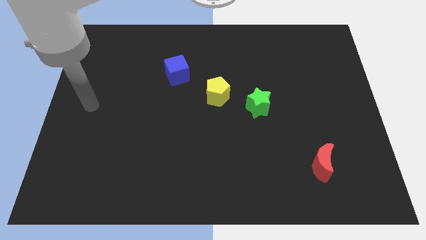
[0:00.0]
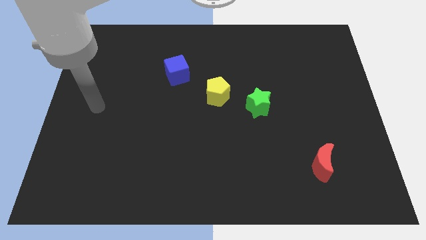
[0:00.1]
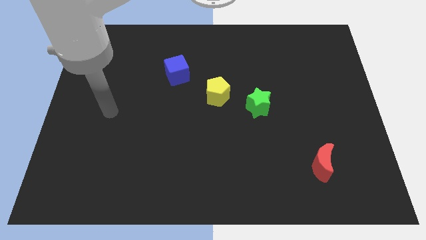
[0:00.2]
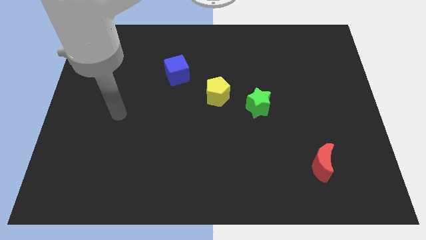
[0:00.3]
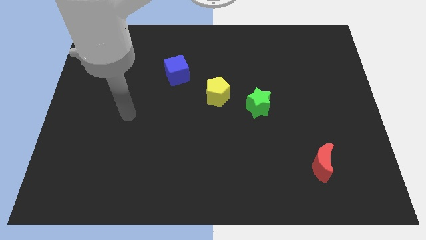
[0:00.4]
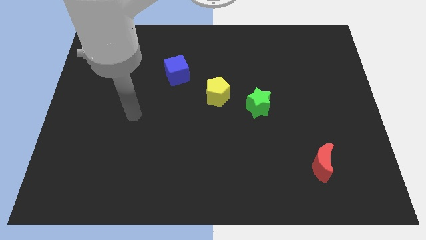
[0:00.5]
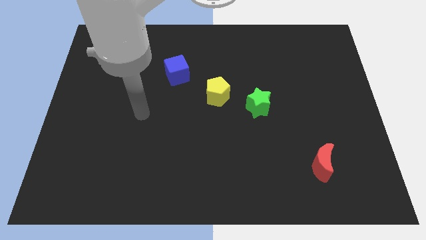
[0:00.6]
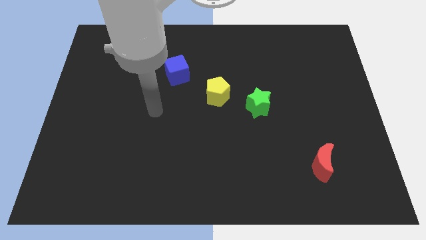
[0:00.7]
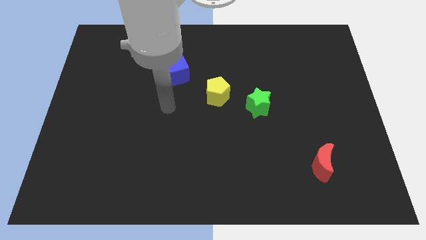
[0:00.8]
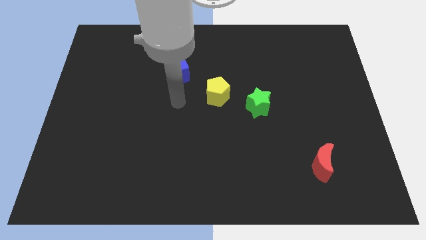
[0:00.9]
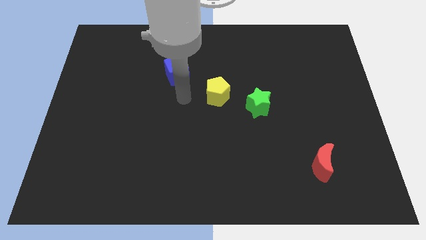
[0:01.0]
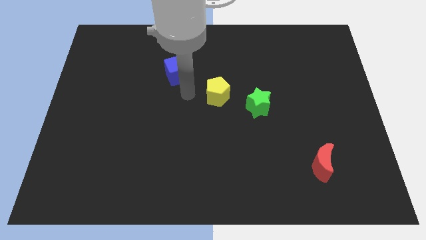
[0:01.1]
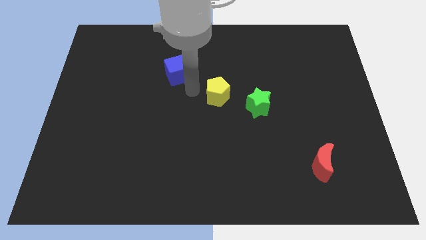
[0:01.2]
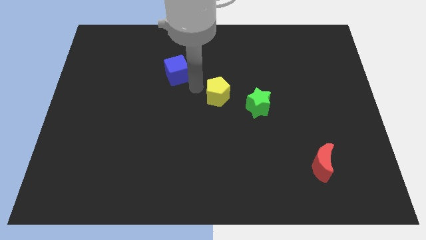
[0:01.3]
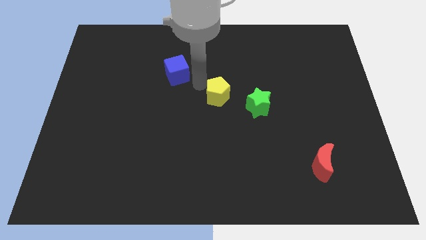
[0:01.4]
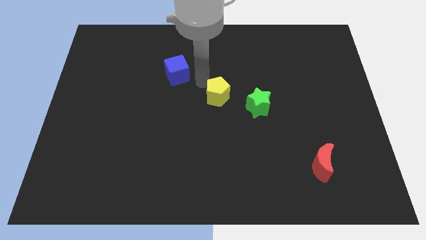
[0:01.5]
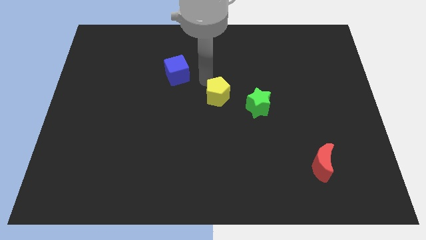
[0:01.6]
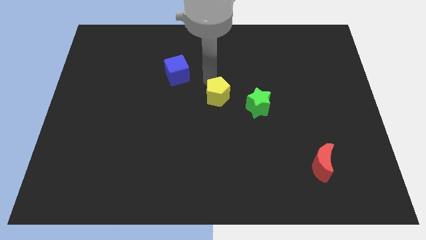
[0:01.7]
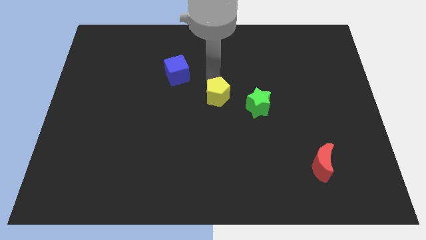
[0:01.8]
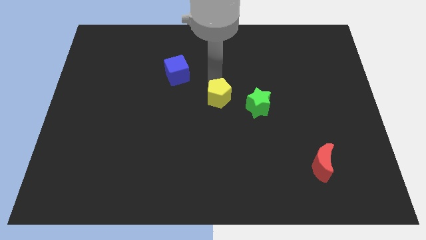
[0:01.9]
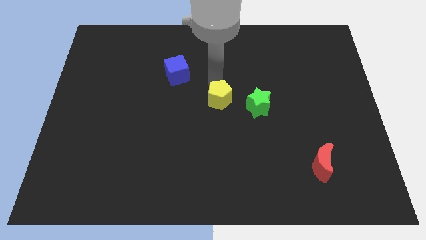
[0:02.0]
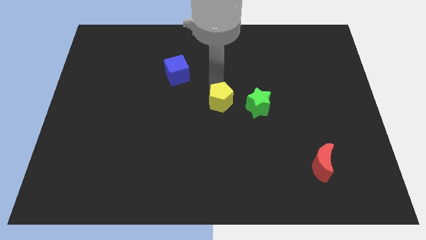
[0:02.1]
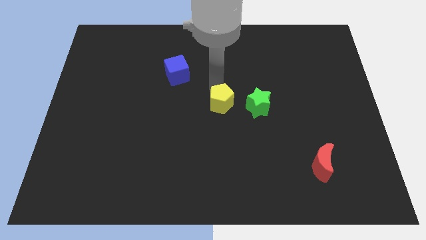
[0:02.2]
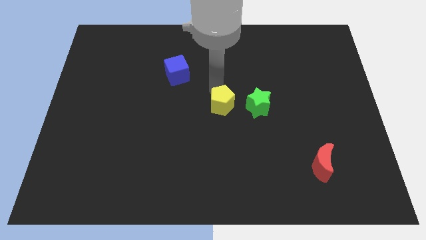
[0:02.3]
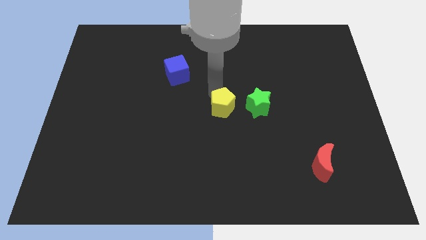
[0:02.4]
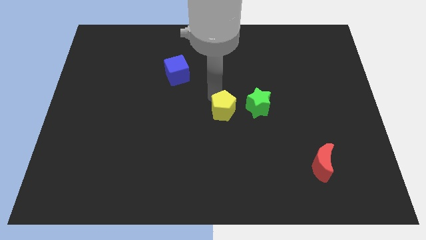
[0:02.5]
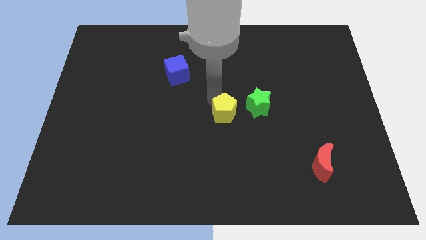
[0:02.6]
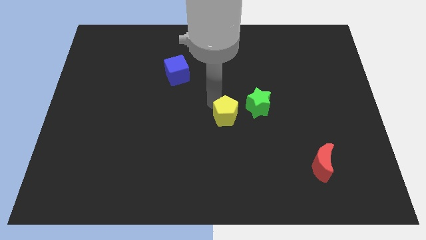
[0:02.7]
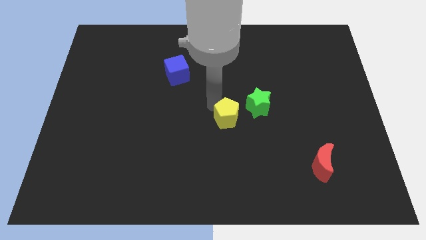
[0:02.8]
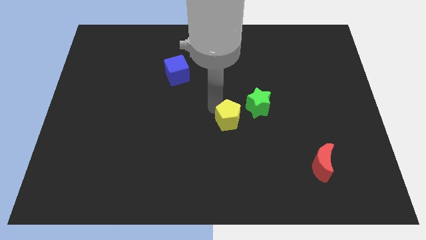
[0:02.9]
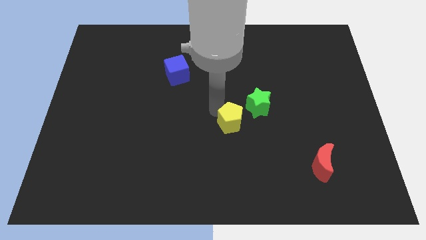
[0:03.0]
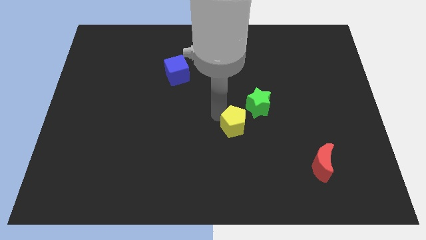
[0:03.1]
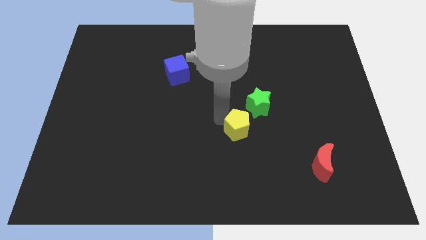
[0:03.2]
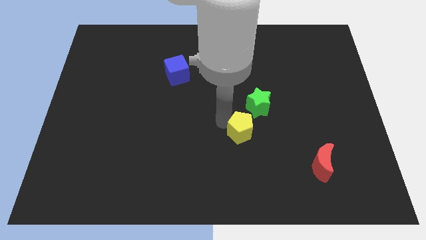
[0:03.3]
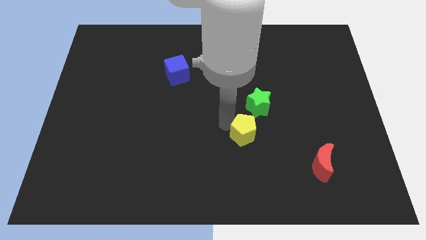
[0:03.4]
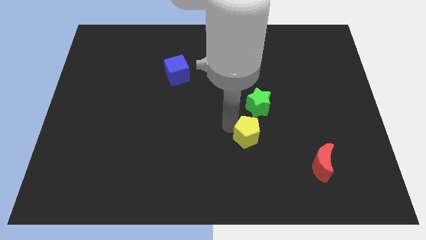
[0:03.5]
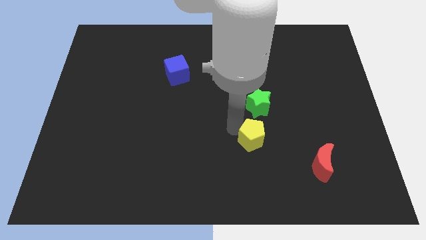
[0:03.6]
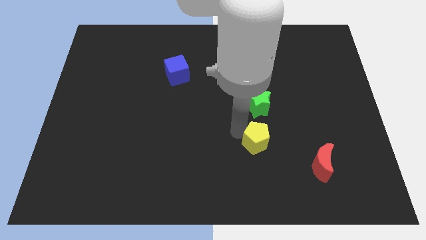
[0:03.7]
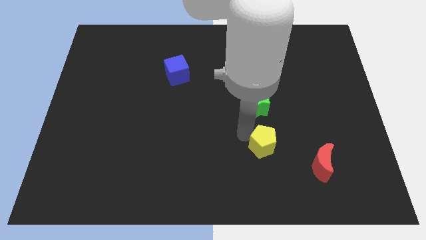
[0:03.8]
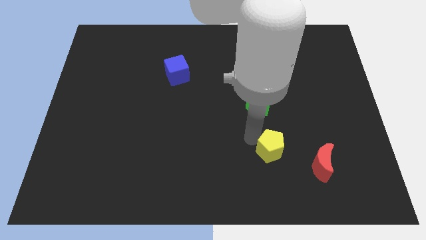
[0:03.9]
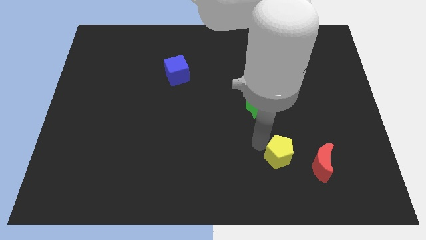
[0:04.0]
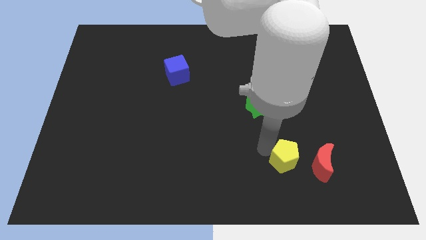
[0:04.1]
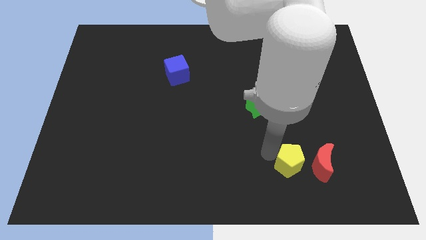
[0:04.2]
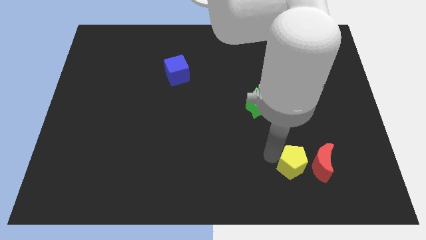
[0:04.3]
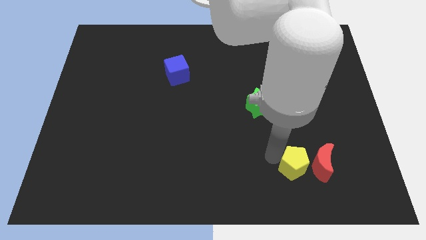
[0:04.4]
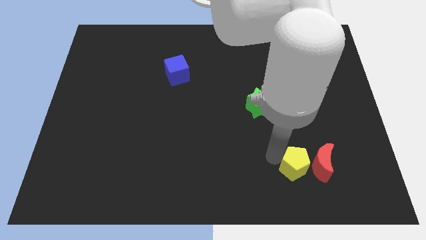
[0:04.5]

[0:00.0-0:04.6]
move the pentagon to the red moon

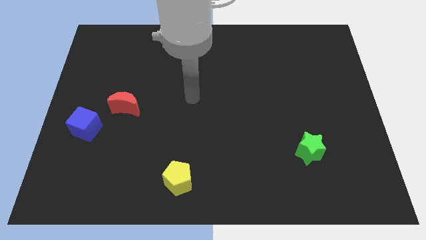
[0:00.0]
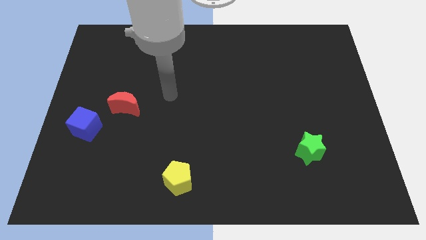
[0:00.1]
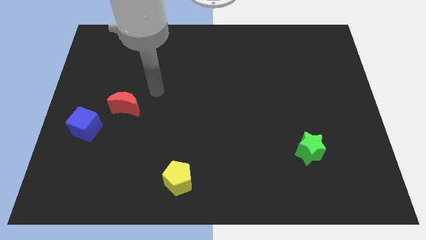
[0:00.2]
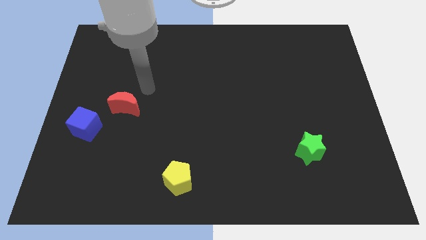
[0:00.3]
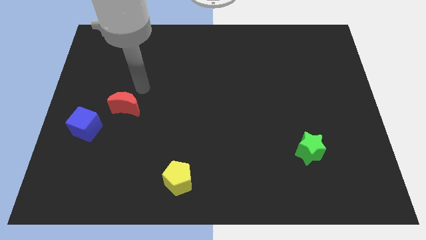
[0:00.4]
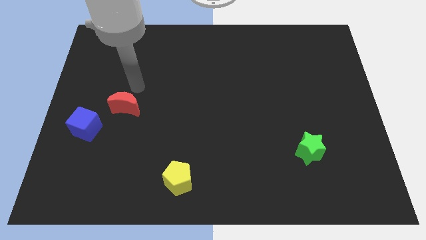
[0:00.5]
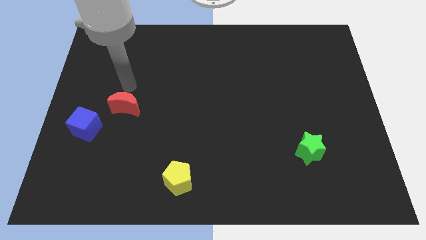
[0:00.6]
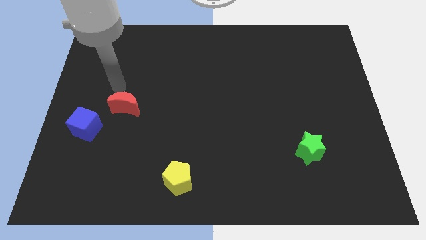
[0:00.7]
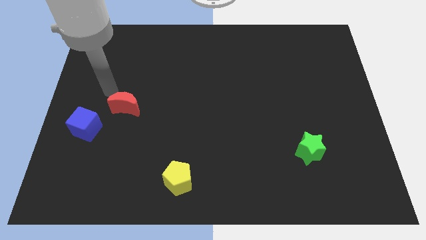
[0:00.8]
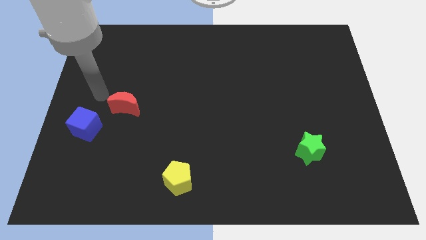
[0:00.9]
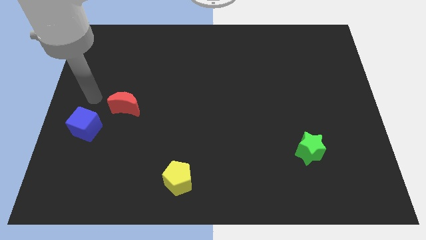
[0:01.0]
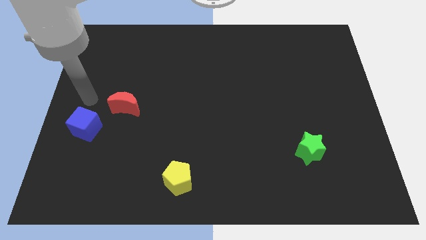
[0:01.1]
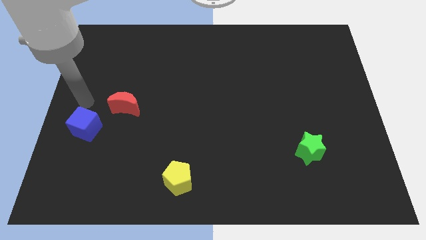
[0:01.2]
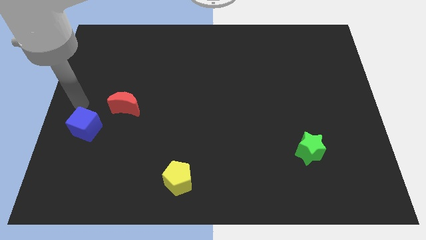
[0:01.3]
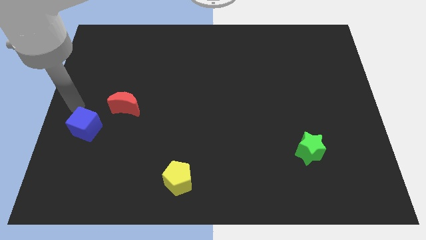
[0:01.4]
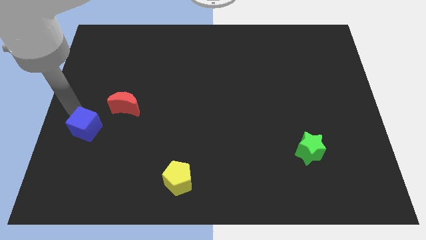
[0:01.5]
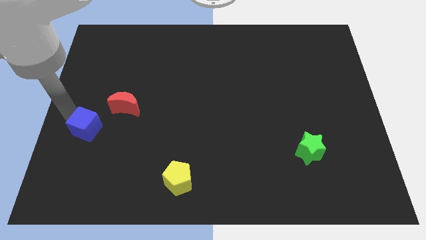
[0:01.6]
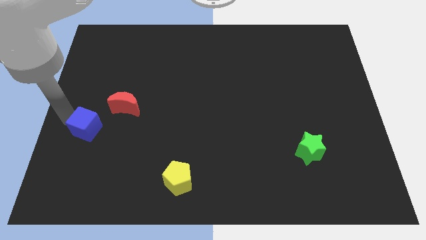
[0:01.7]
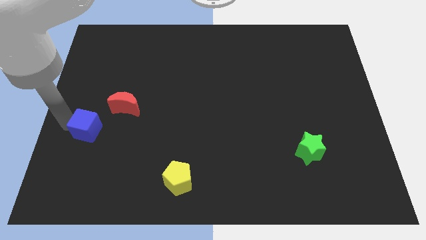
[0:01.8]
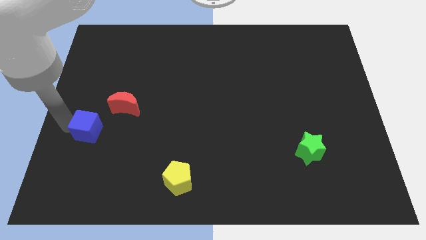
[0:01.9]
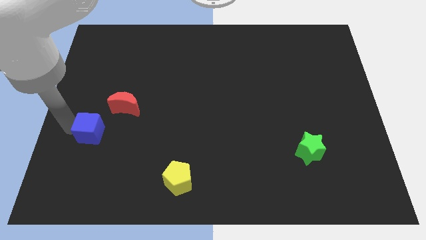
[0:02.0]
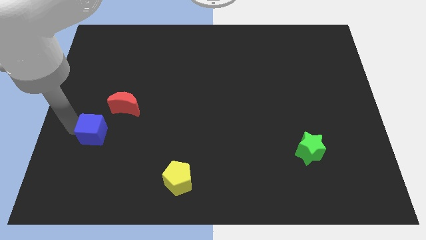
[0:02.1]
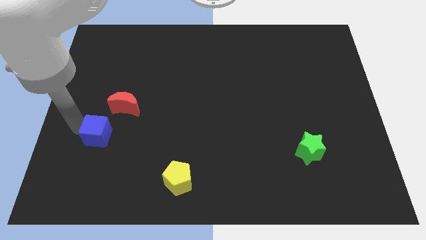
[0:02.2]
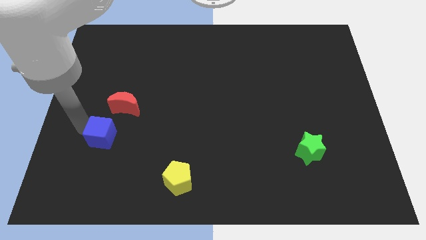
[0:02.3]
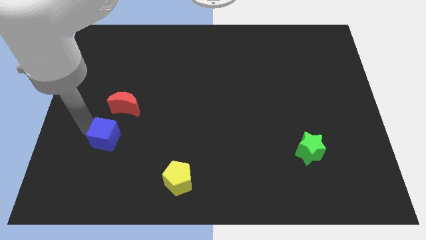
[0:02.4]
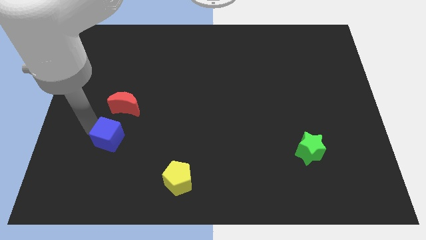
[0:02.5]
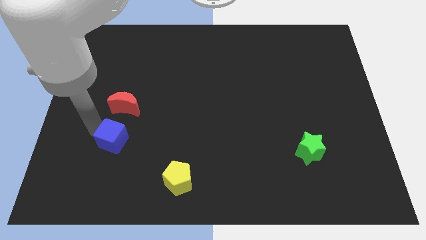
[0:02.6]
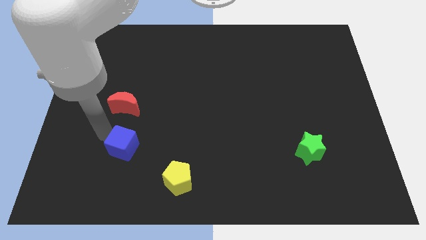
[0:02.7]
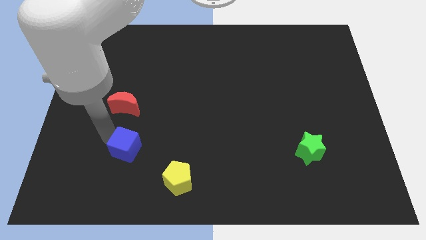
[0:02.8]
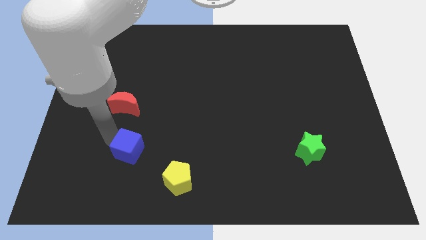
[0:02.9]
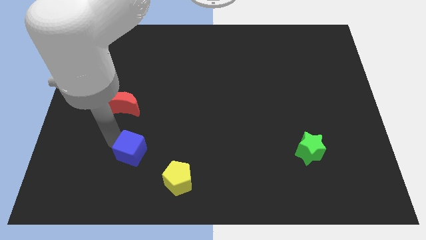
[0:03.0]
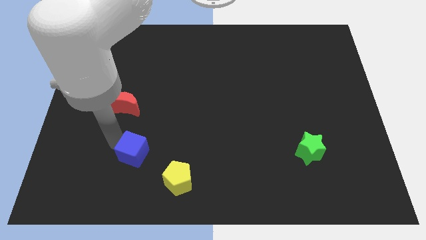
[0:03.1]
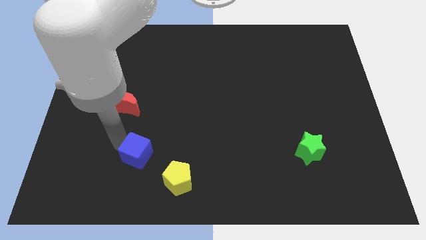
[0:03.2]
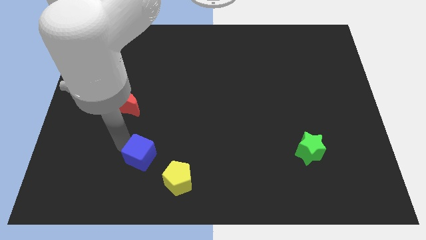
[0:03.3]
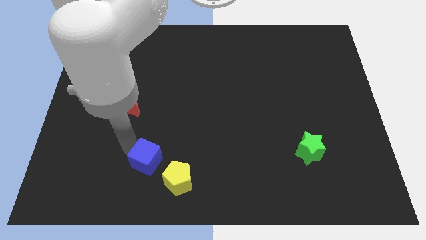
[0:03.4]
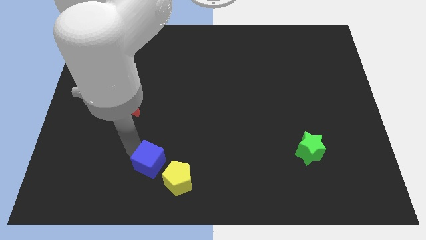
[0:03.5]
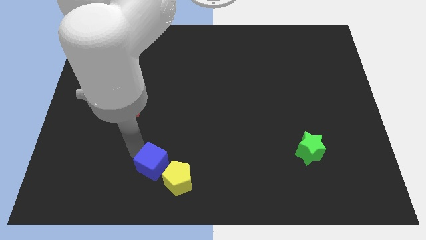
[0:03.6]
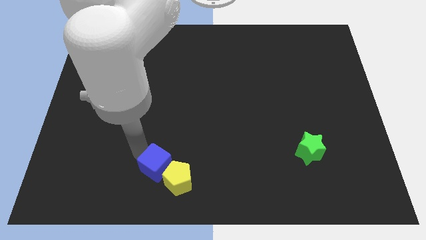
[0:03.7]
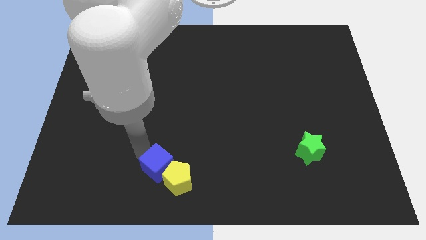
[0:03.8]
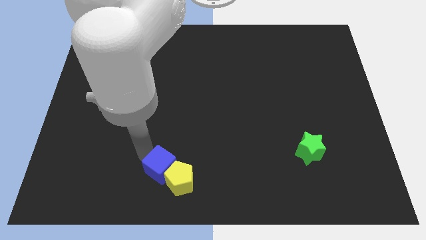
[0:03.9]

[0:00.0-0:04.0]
slide the cube towards the yellow pentagon
